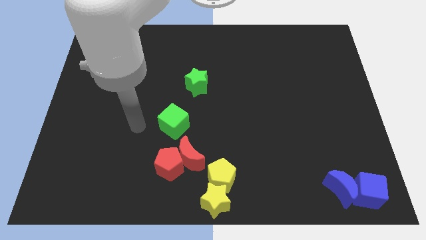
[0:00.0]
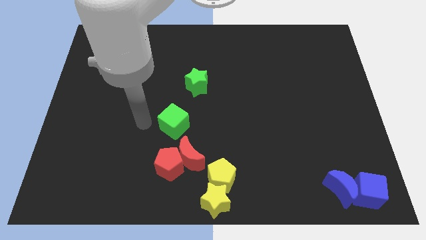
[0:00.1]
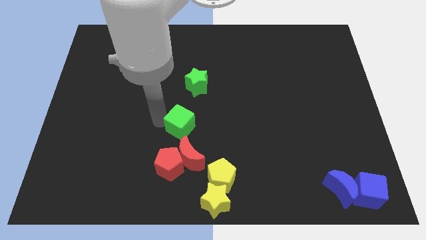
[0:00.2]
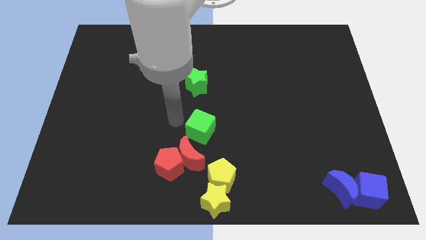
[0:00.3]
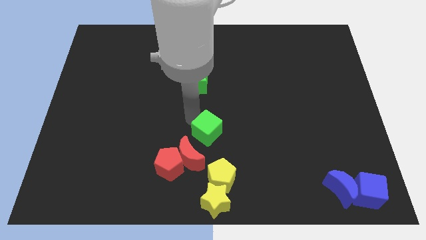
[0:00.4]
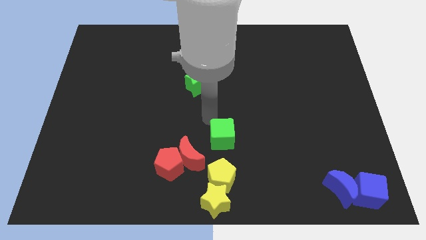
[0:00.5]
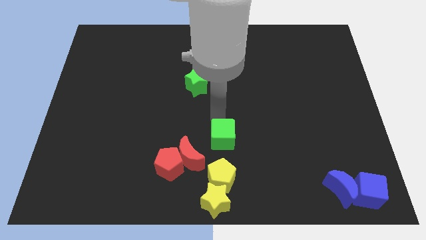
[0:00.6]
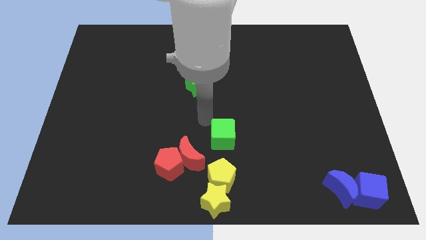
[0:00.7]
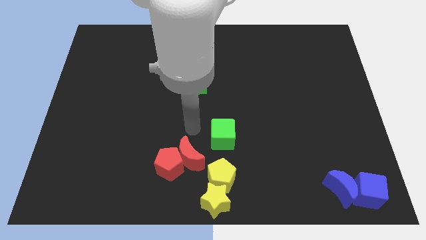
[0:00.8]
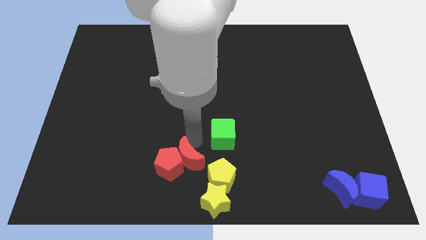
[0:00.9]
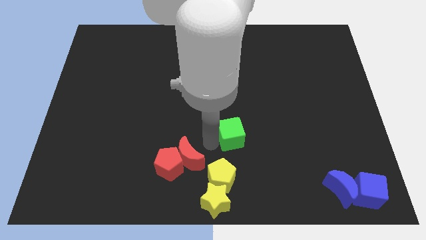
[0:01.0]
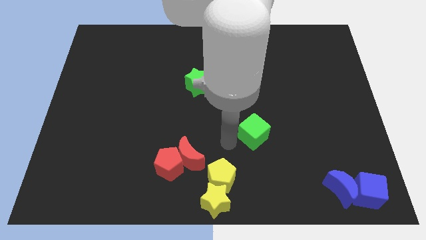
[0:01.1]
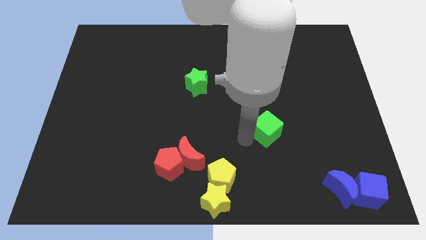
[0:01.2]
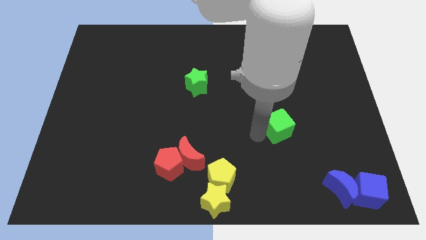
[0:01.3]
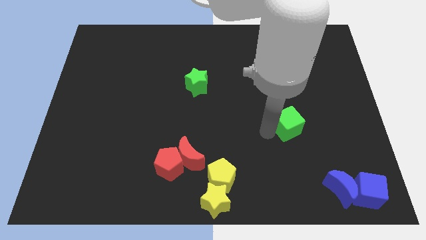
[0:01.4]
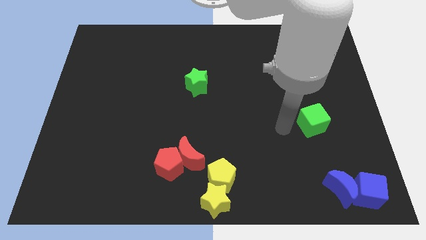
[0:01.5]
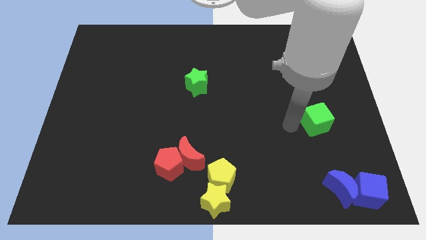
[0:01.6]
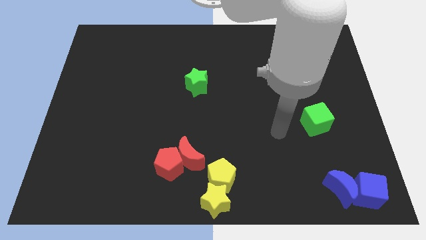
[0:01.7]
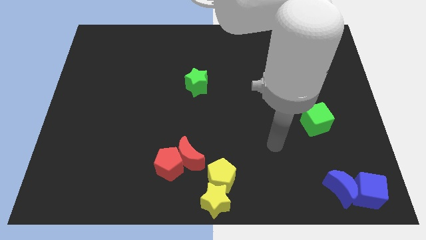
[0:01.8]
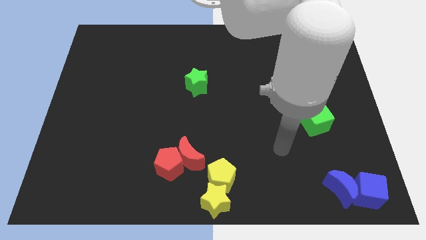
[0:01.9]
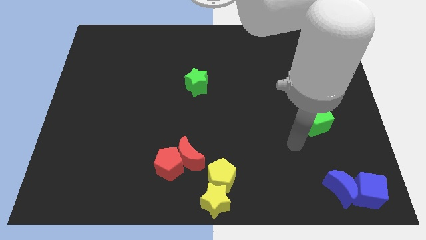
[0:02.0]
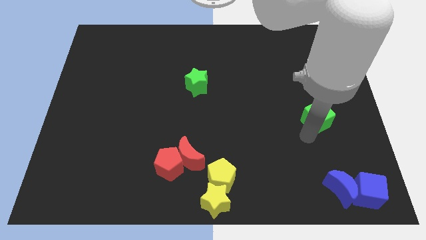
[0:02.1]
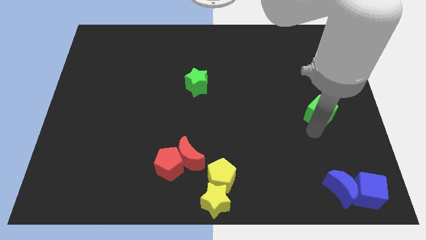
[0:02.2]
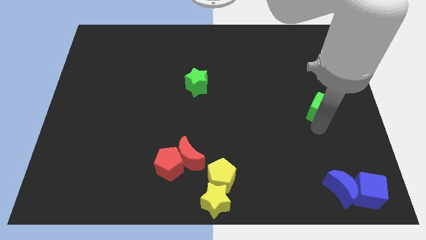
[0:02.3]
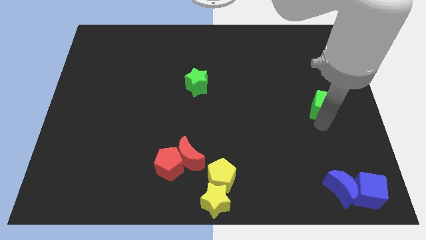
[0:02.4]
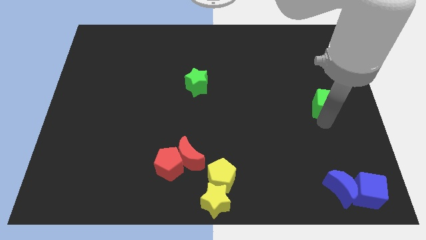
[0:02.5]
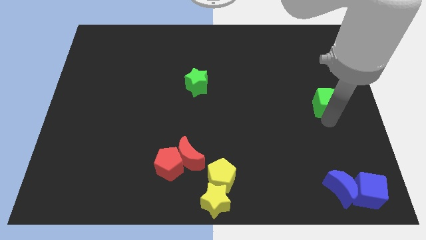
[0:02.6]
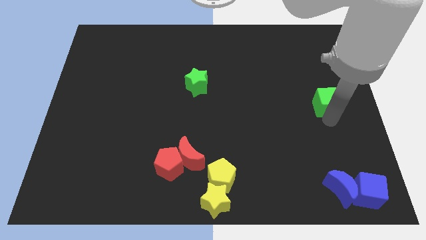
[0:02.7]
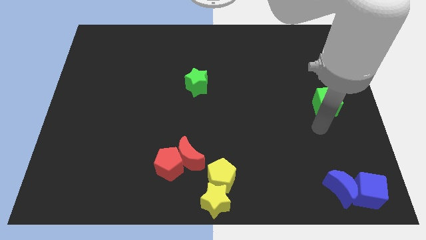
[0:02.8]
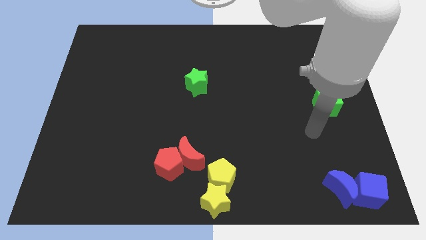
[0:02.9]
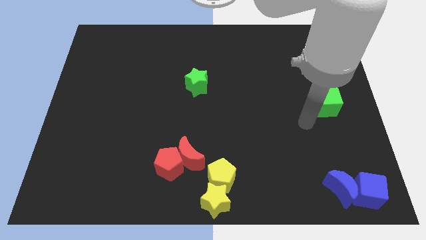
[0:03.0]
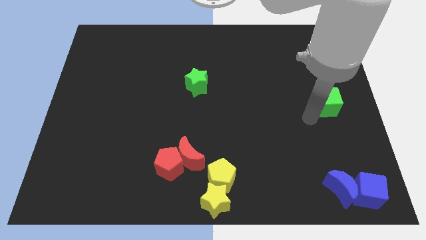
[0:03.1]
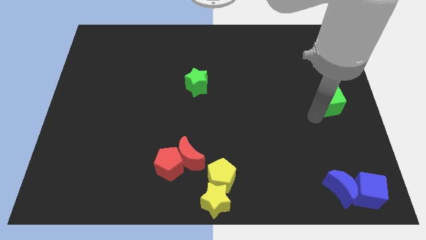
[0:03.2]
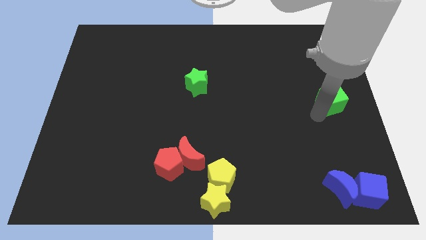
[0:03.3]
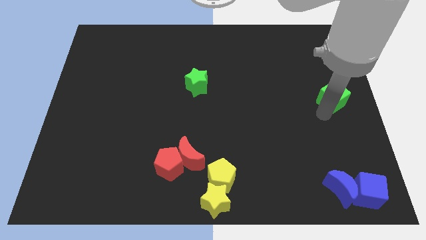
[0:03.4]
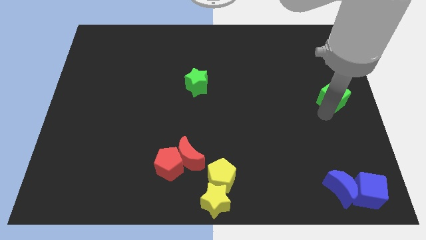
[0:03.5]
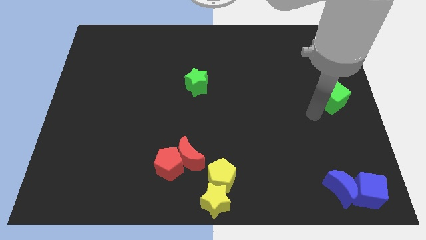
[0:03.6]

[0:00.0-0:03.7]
move the green cube towards the center right of the board

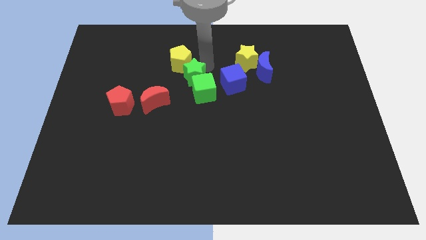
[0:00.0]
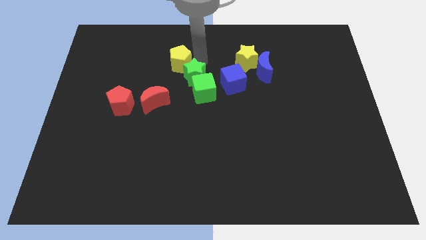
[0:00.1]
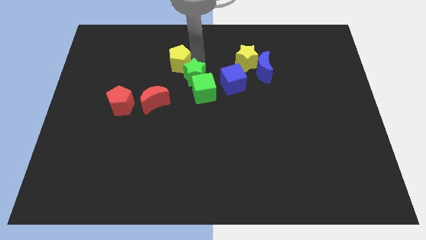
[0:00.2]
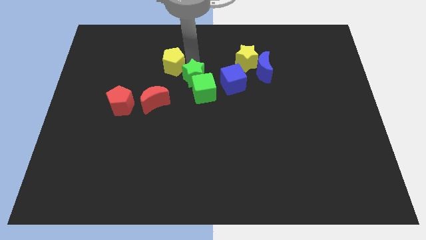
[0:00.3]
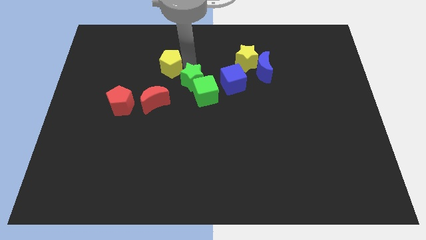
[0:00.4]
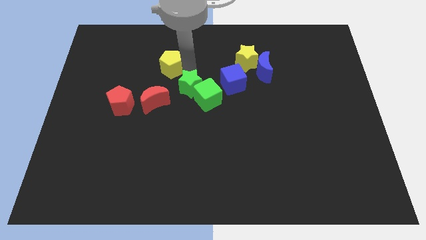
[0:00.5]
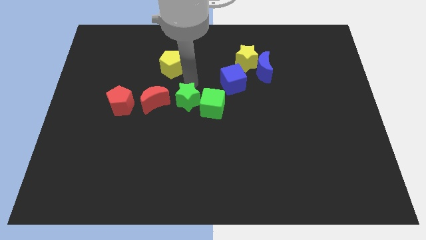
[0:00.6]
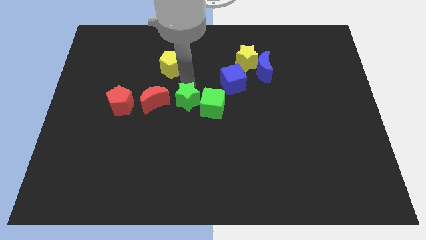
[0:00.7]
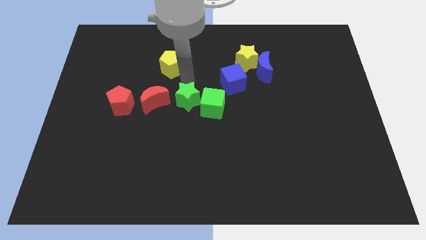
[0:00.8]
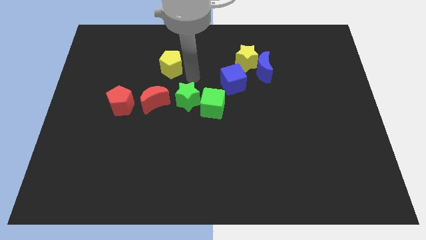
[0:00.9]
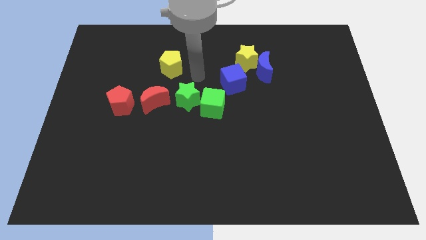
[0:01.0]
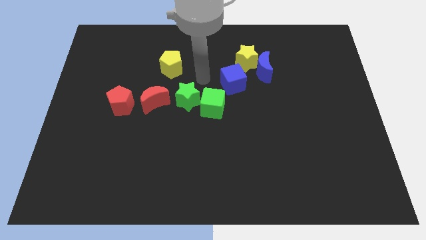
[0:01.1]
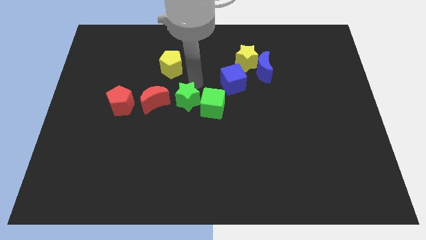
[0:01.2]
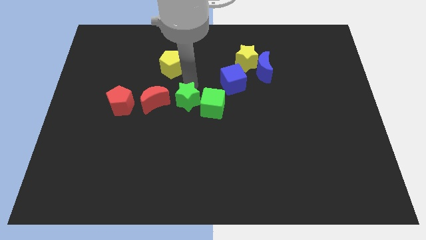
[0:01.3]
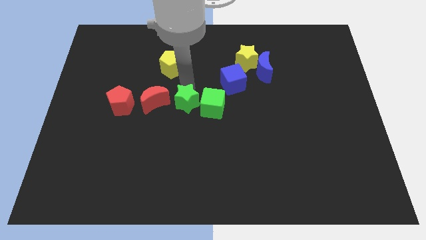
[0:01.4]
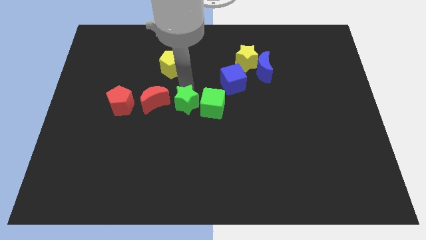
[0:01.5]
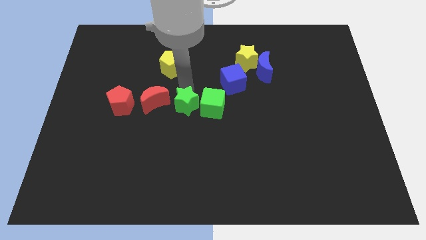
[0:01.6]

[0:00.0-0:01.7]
move the green blocks to form horizontal row right to red crescent

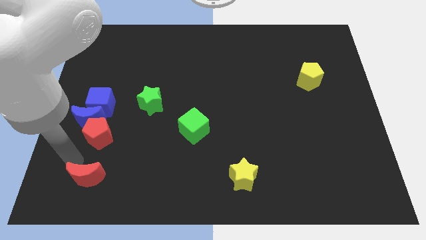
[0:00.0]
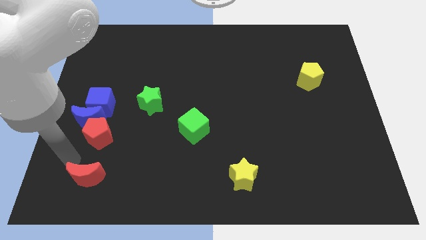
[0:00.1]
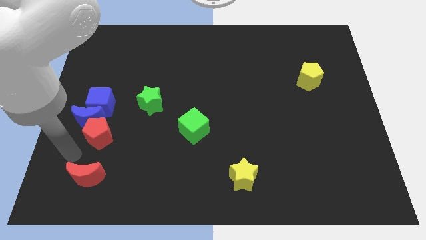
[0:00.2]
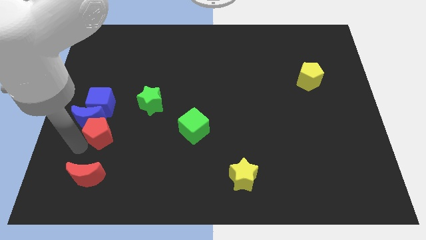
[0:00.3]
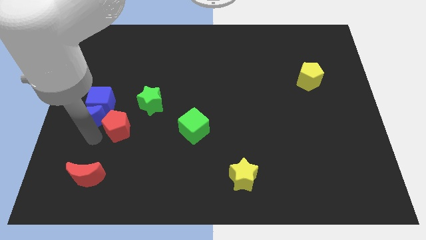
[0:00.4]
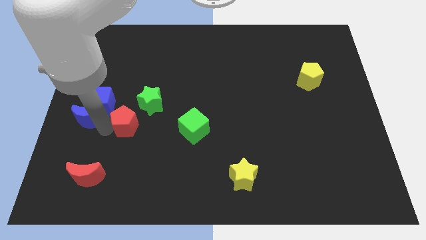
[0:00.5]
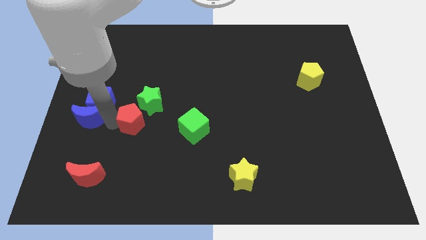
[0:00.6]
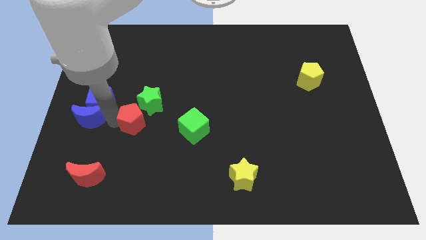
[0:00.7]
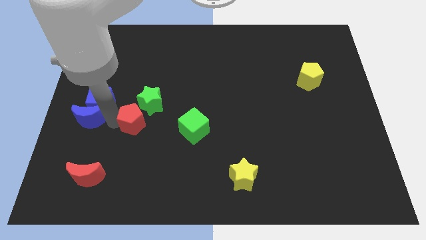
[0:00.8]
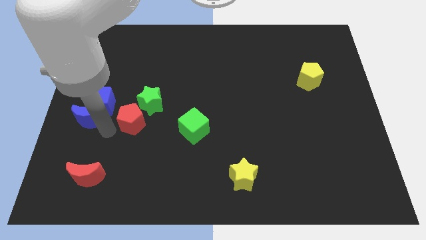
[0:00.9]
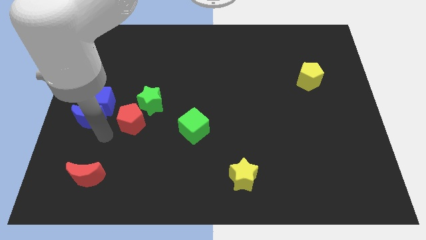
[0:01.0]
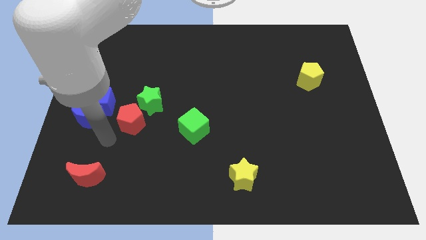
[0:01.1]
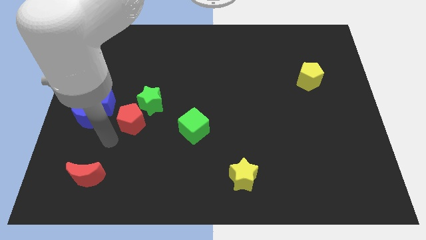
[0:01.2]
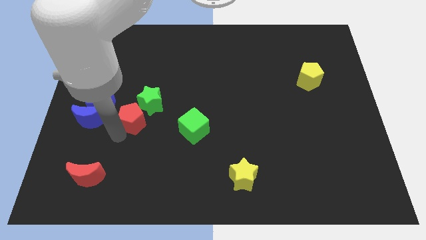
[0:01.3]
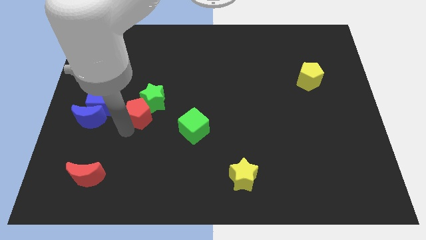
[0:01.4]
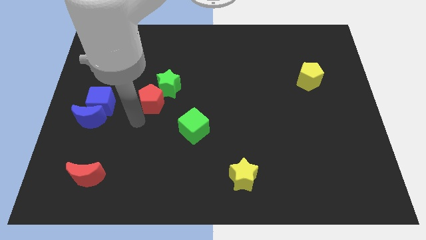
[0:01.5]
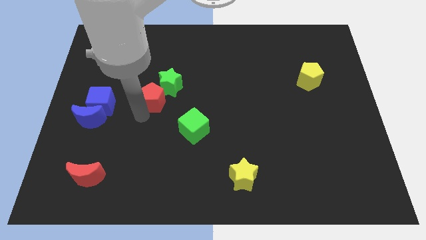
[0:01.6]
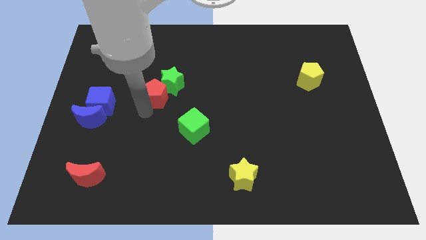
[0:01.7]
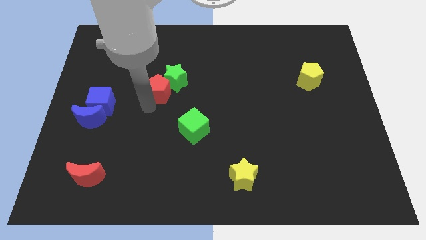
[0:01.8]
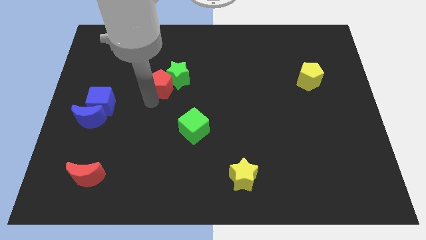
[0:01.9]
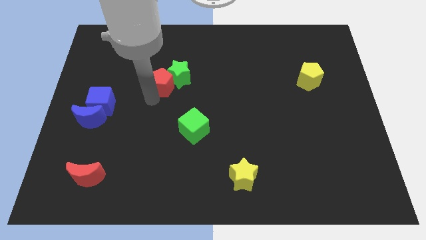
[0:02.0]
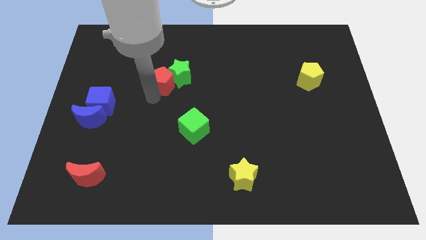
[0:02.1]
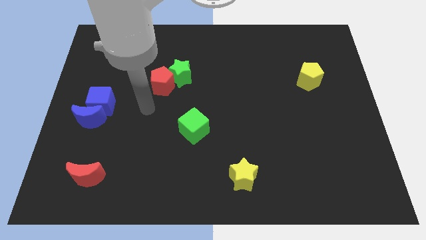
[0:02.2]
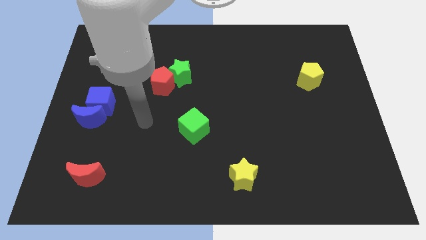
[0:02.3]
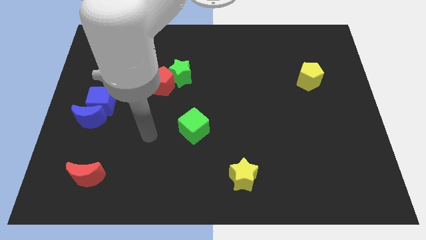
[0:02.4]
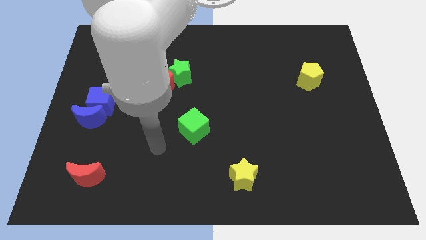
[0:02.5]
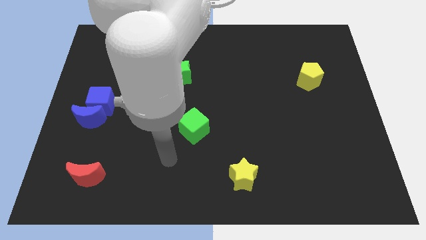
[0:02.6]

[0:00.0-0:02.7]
move the green star towards the top center with the red pentagon

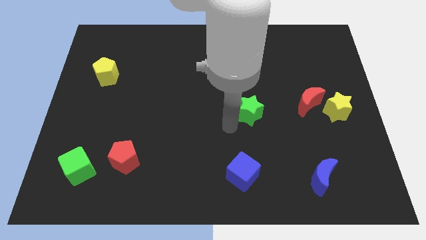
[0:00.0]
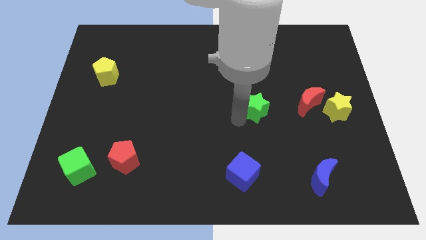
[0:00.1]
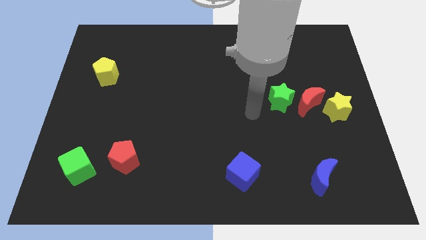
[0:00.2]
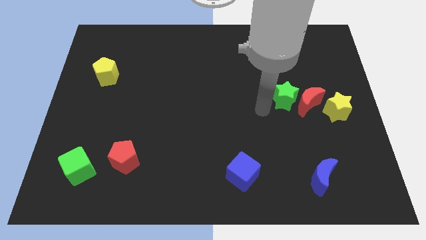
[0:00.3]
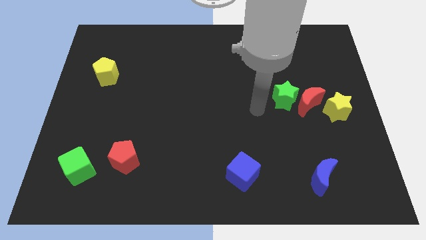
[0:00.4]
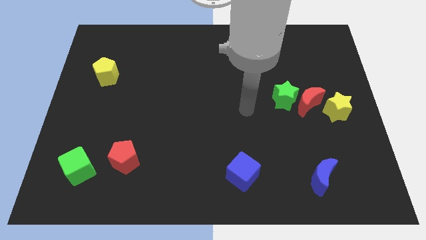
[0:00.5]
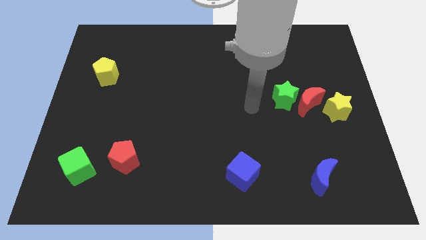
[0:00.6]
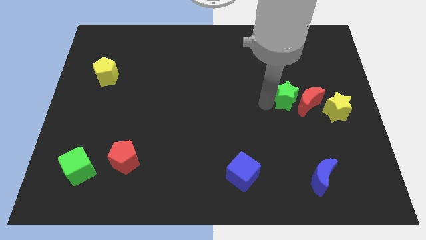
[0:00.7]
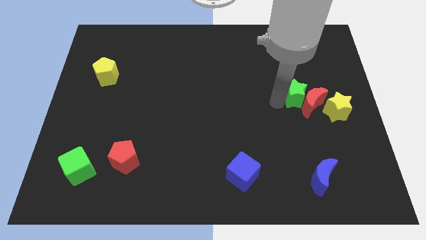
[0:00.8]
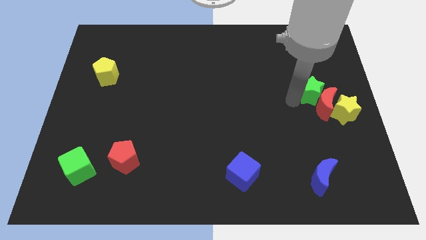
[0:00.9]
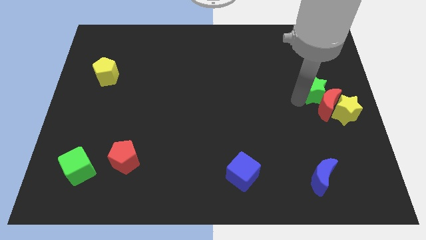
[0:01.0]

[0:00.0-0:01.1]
push green star above blue crescent
